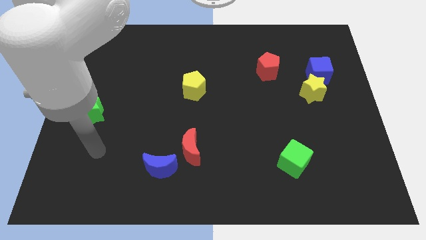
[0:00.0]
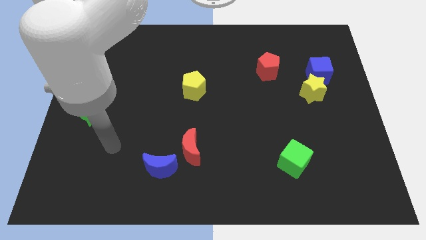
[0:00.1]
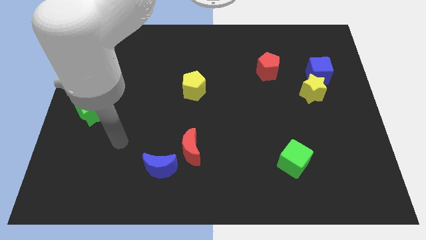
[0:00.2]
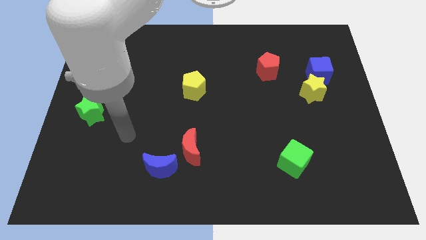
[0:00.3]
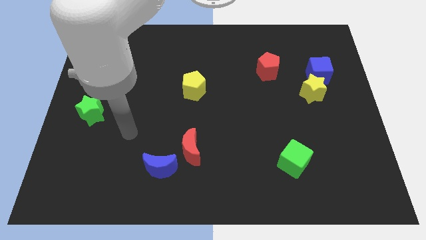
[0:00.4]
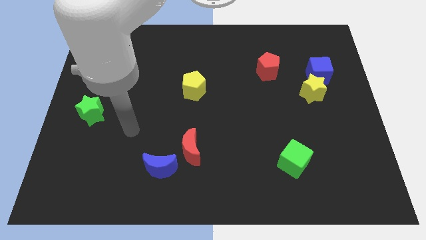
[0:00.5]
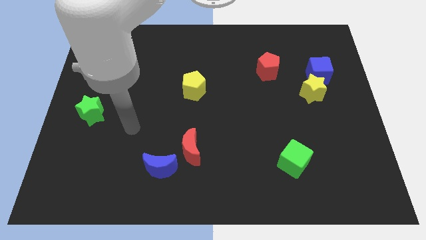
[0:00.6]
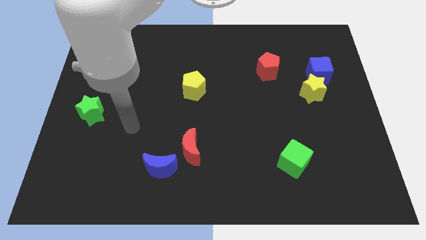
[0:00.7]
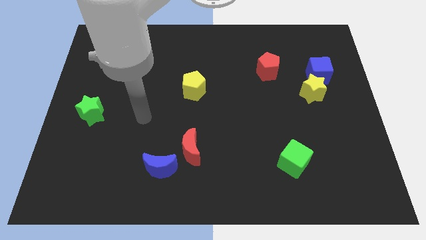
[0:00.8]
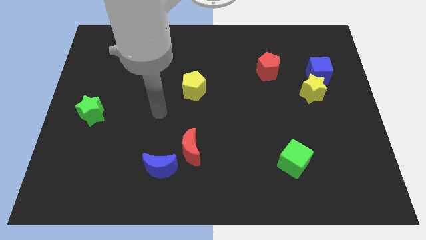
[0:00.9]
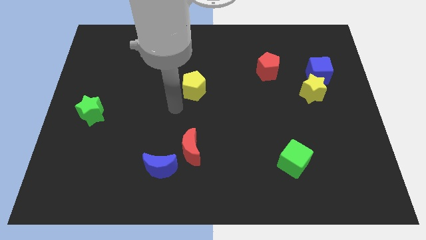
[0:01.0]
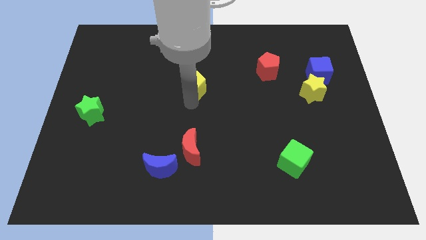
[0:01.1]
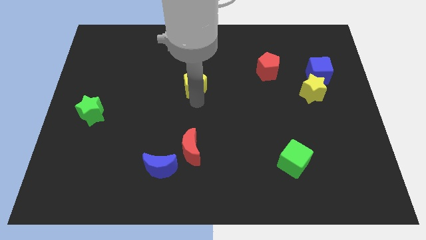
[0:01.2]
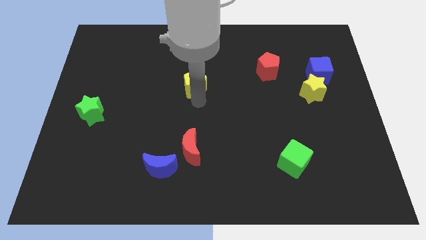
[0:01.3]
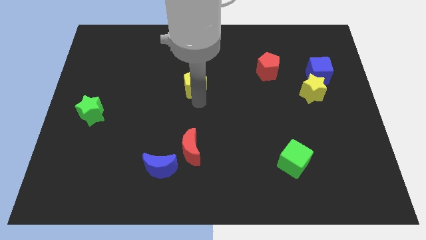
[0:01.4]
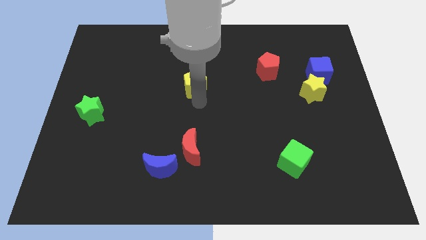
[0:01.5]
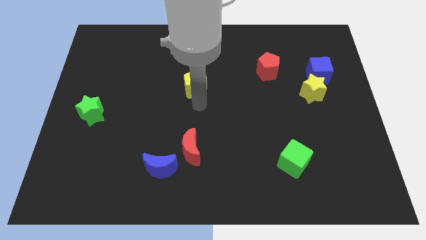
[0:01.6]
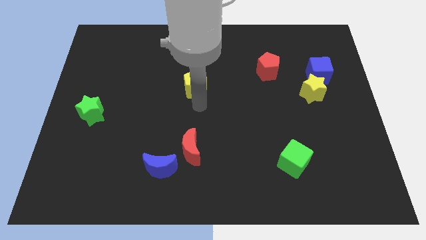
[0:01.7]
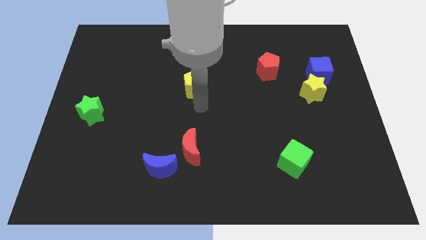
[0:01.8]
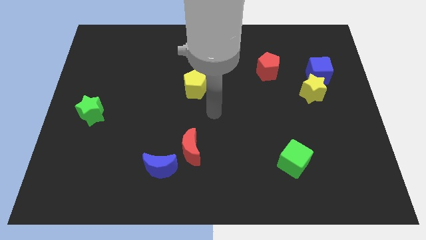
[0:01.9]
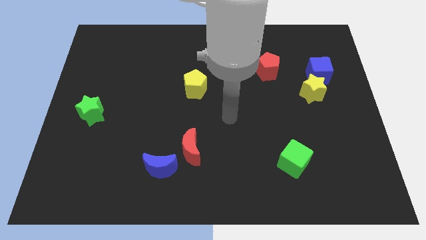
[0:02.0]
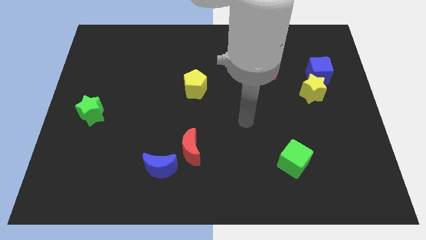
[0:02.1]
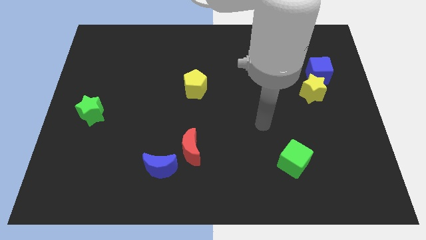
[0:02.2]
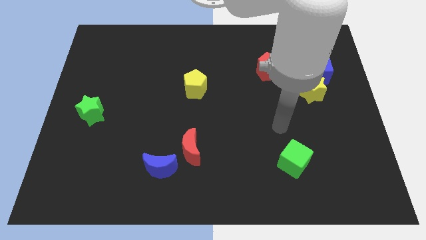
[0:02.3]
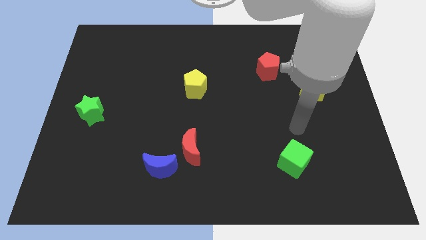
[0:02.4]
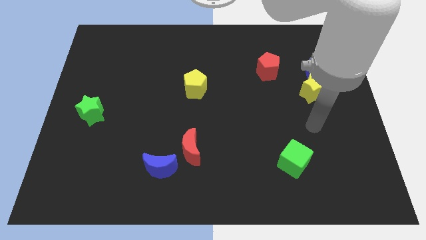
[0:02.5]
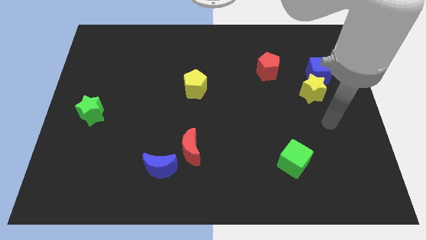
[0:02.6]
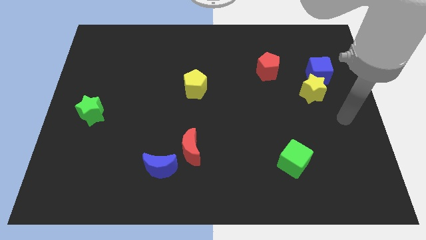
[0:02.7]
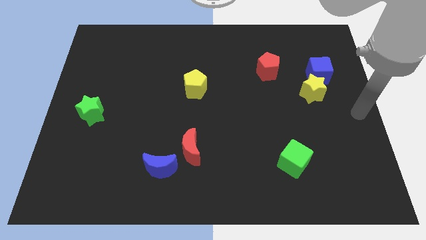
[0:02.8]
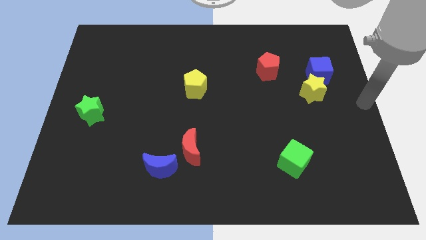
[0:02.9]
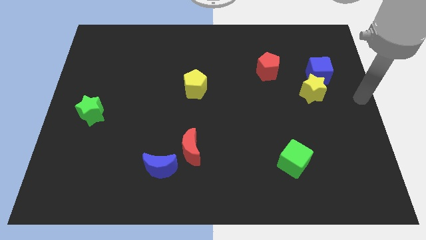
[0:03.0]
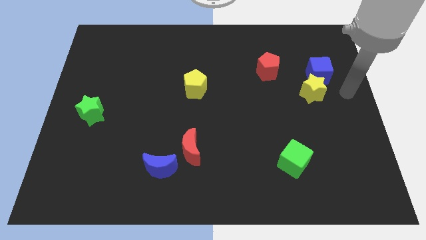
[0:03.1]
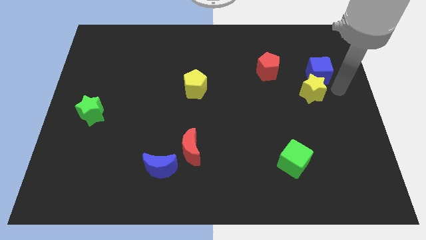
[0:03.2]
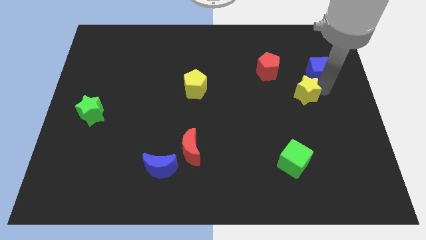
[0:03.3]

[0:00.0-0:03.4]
touch the yellow star

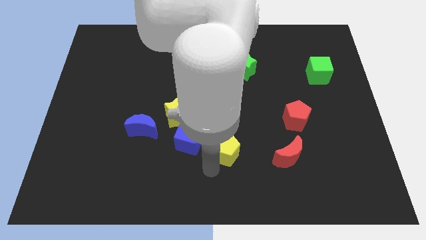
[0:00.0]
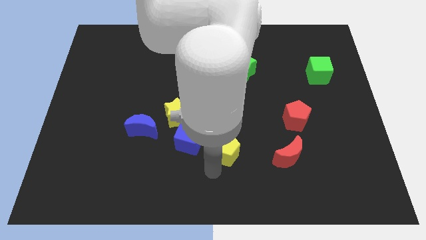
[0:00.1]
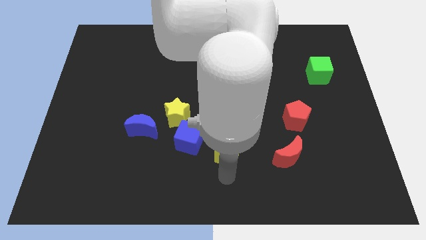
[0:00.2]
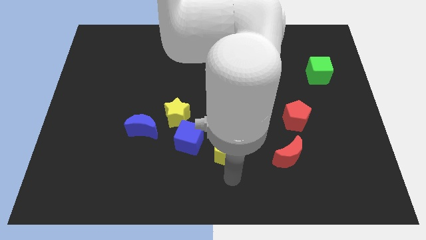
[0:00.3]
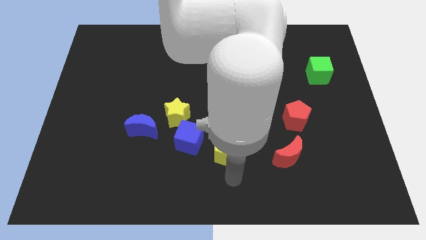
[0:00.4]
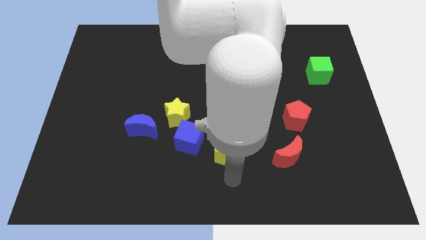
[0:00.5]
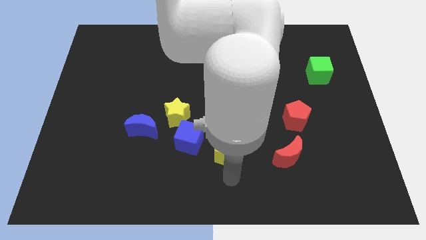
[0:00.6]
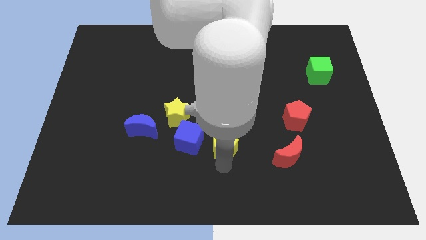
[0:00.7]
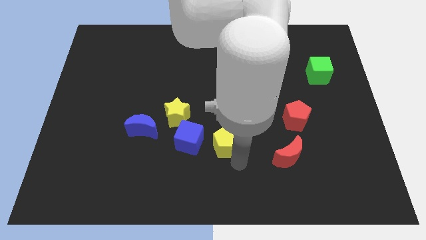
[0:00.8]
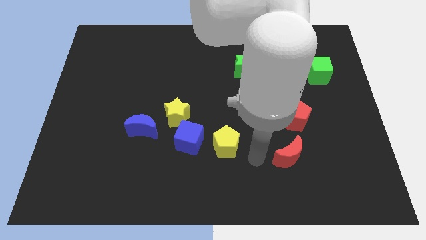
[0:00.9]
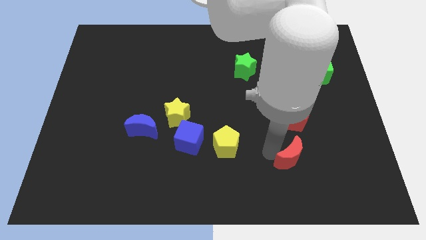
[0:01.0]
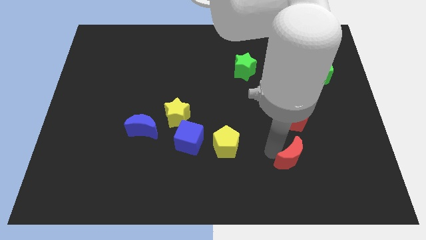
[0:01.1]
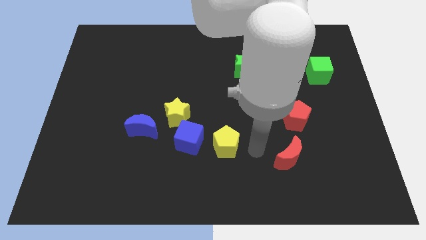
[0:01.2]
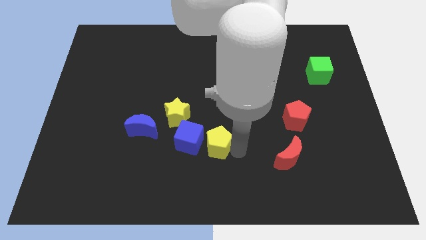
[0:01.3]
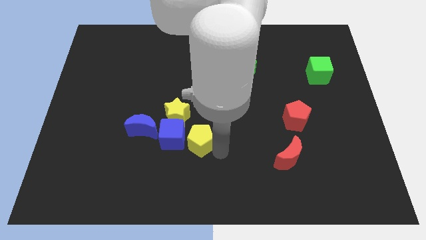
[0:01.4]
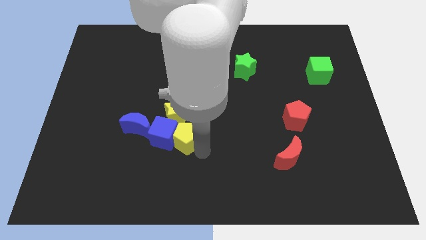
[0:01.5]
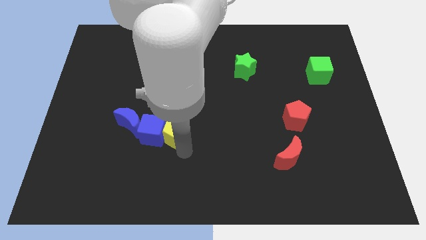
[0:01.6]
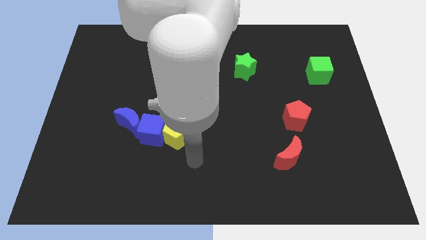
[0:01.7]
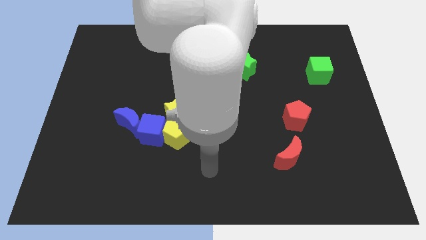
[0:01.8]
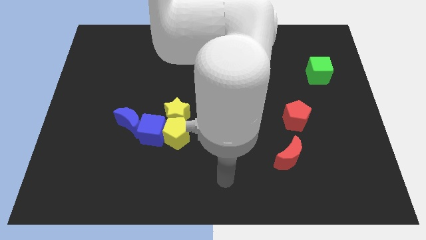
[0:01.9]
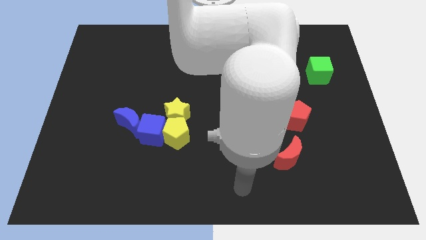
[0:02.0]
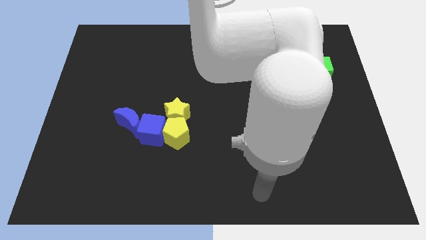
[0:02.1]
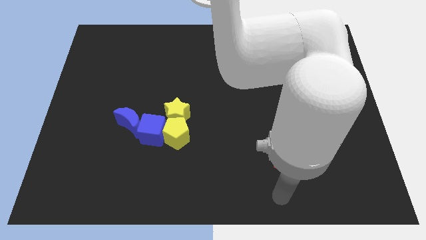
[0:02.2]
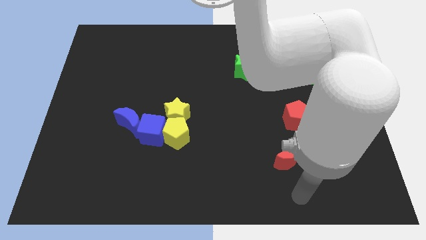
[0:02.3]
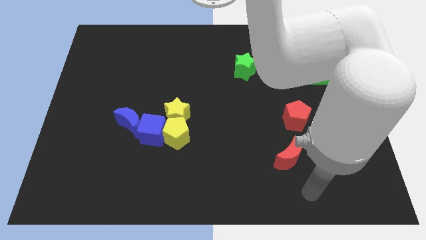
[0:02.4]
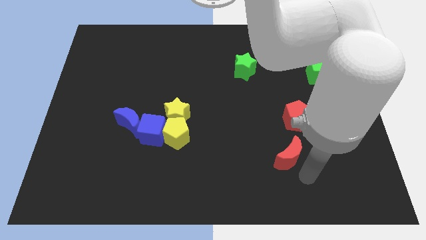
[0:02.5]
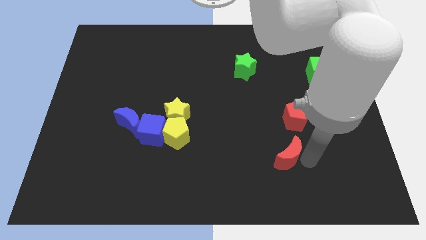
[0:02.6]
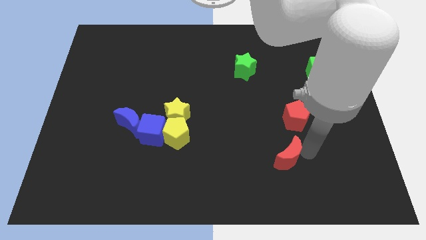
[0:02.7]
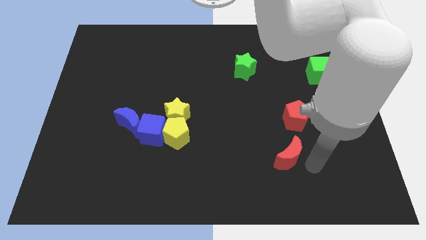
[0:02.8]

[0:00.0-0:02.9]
push the yellow pentagon into the blue blocks

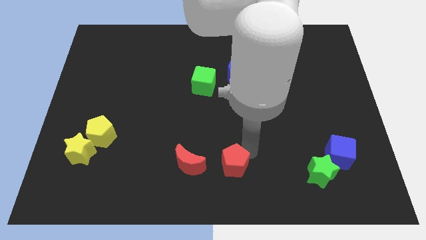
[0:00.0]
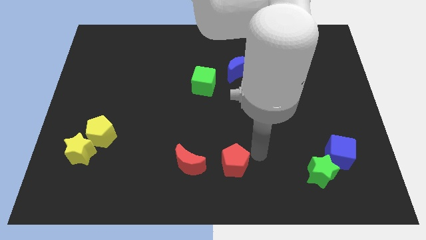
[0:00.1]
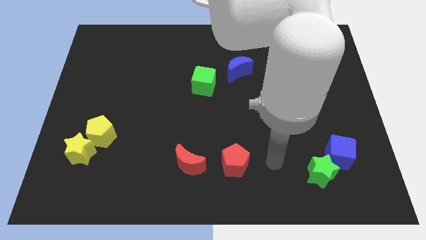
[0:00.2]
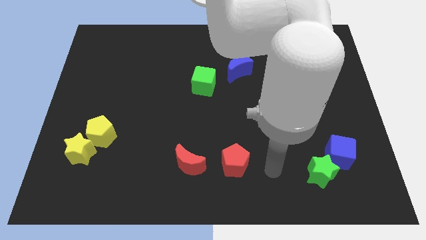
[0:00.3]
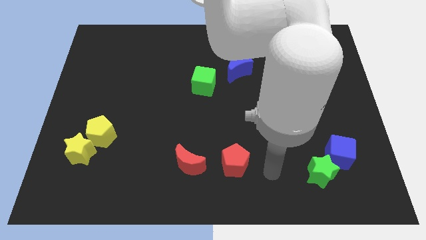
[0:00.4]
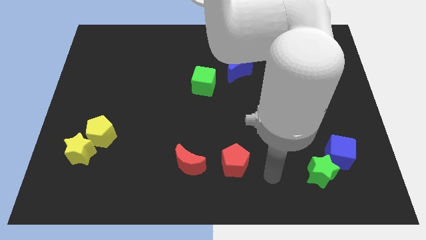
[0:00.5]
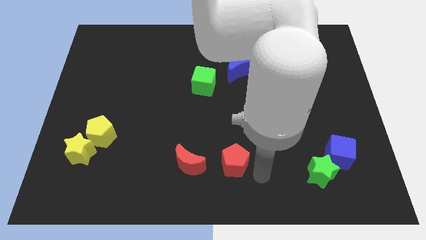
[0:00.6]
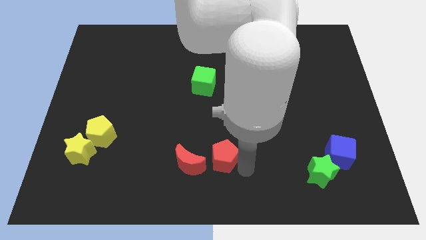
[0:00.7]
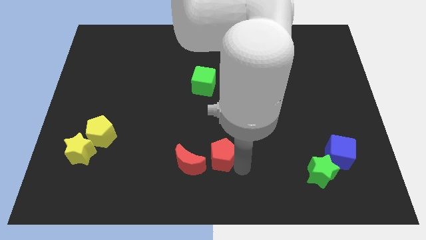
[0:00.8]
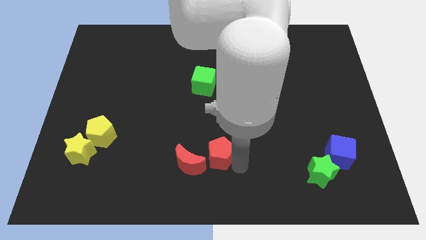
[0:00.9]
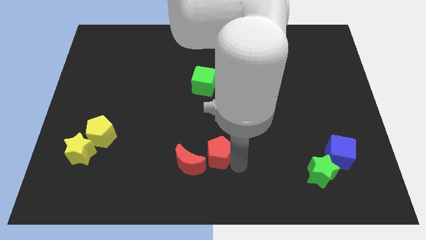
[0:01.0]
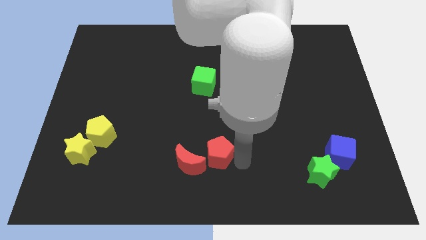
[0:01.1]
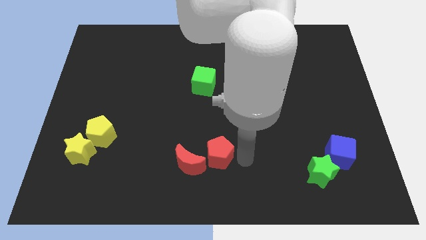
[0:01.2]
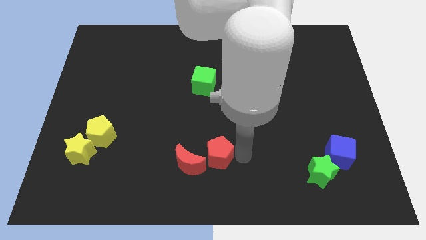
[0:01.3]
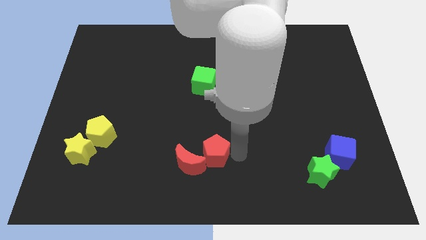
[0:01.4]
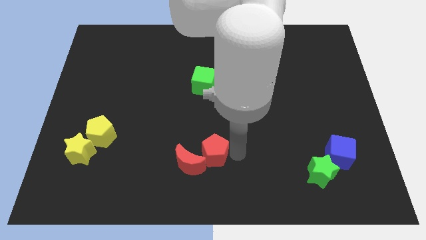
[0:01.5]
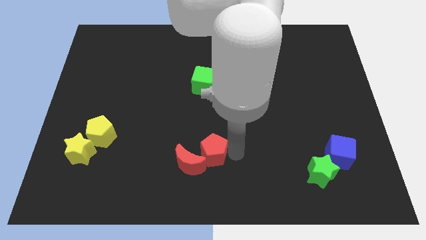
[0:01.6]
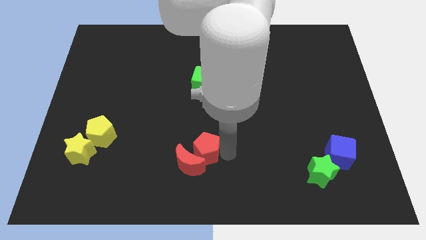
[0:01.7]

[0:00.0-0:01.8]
move the red pentagon above the red moon

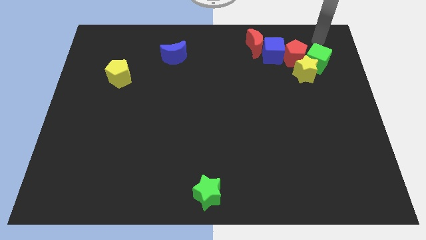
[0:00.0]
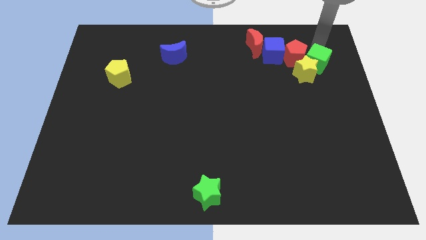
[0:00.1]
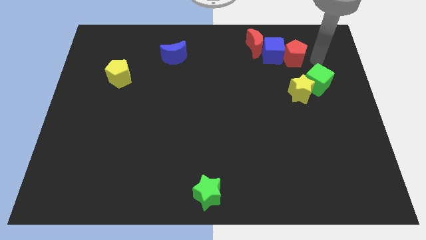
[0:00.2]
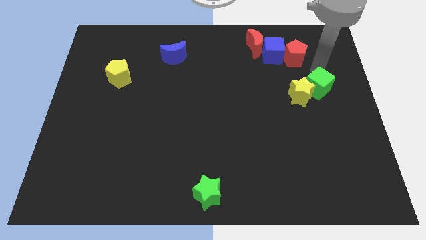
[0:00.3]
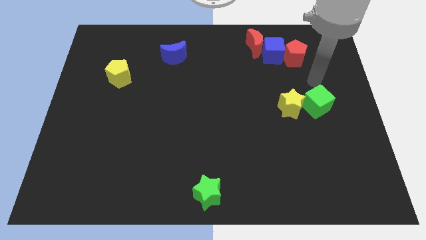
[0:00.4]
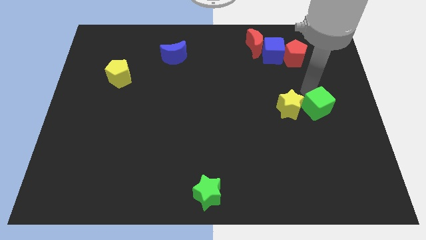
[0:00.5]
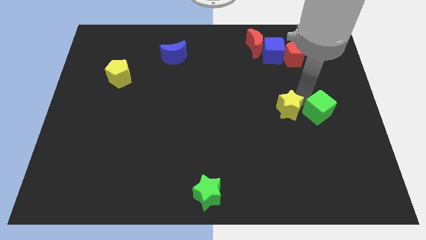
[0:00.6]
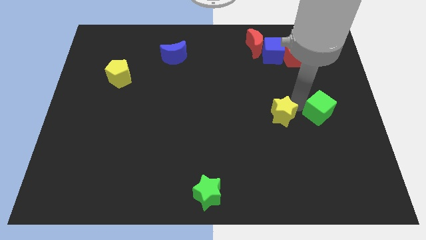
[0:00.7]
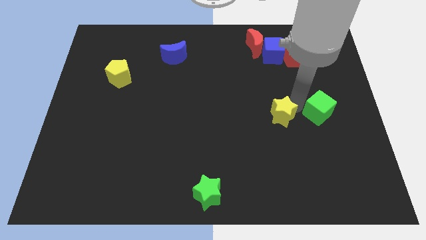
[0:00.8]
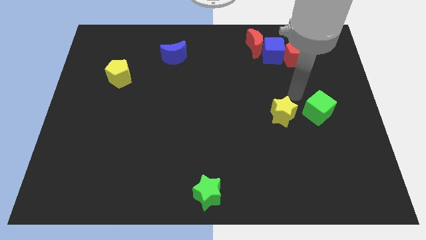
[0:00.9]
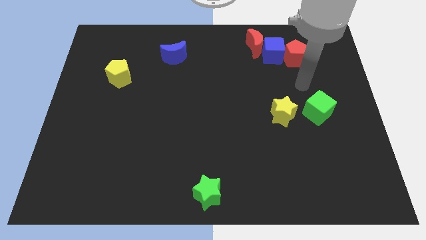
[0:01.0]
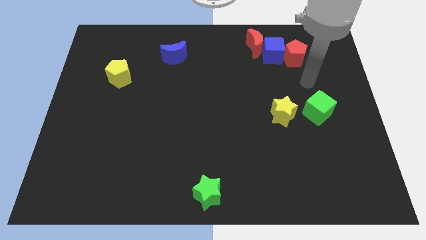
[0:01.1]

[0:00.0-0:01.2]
slide the yellow star and green cube slightly to the bottom side of the board
